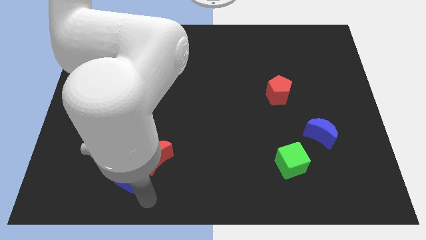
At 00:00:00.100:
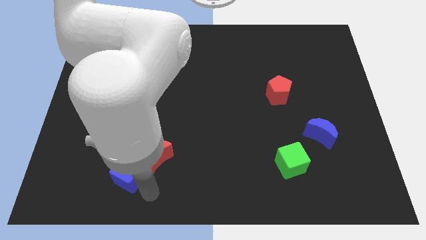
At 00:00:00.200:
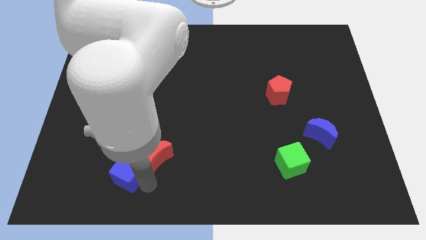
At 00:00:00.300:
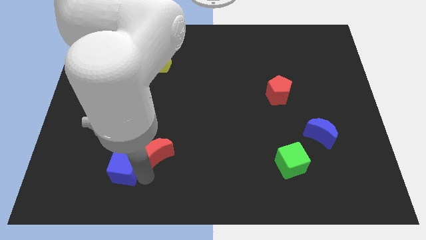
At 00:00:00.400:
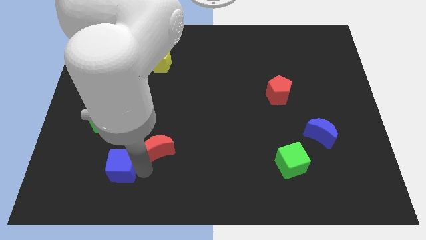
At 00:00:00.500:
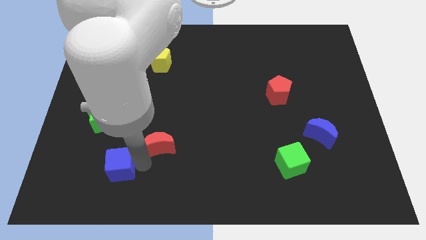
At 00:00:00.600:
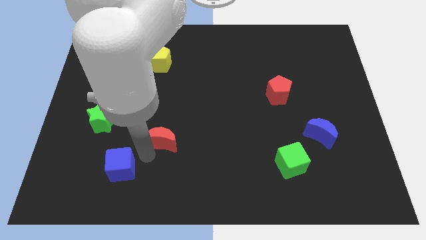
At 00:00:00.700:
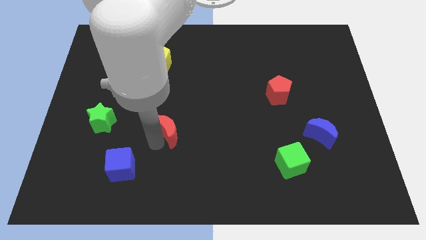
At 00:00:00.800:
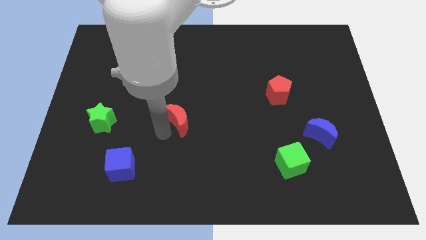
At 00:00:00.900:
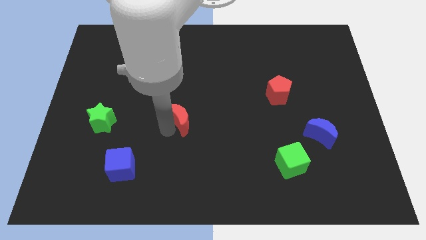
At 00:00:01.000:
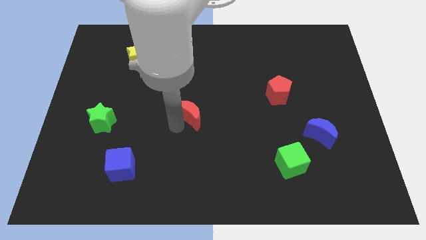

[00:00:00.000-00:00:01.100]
separate the red moon from blue cube

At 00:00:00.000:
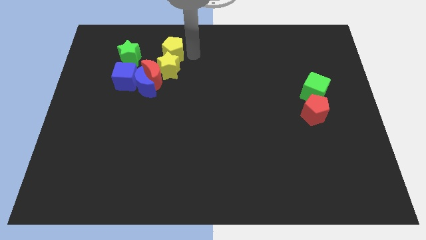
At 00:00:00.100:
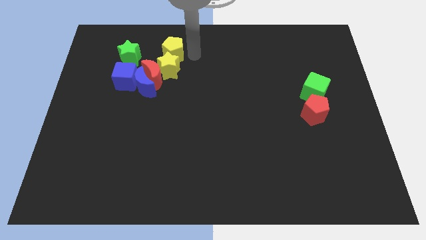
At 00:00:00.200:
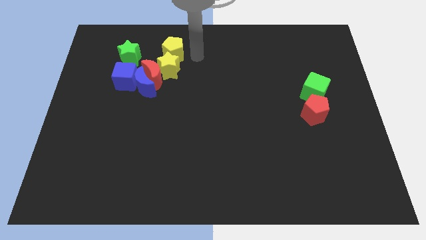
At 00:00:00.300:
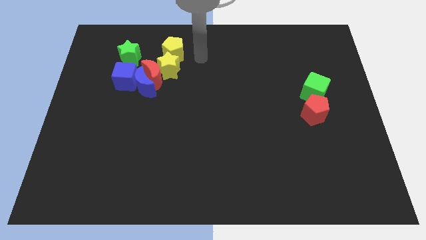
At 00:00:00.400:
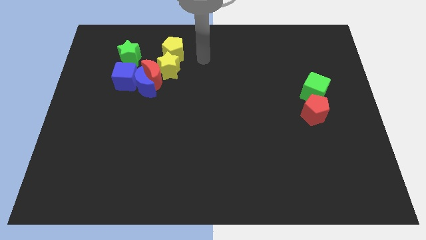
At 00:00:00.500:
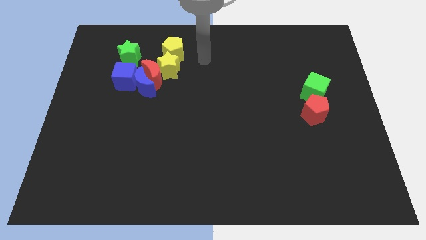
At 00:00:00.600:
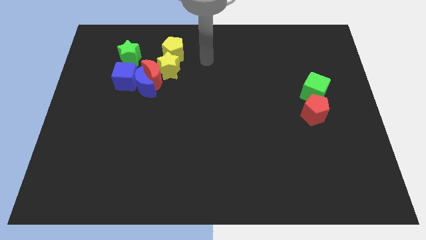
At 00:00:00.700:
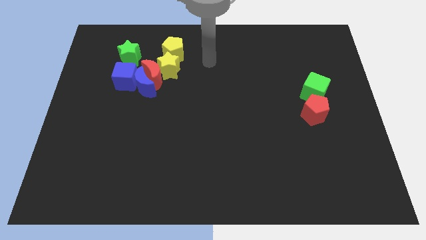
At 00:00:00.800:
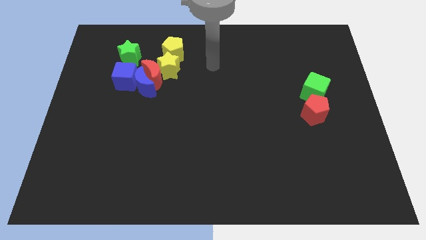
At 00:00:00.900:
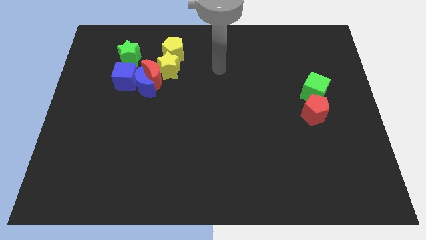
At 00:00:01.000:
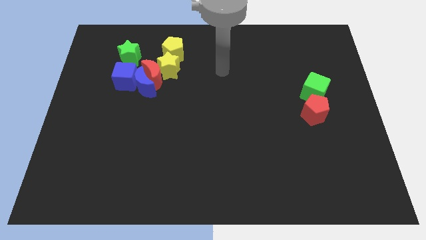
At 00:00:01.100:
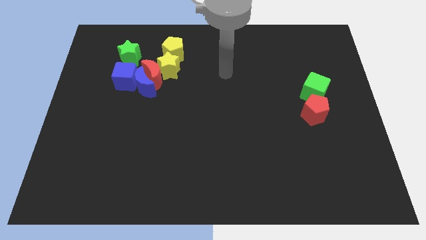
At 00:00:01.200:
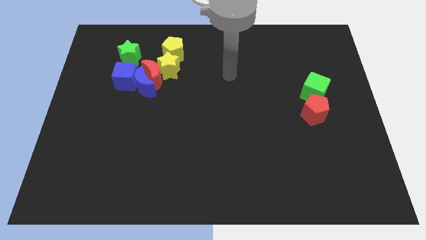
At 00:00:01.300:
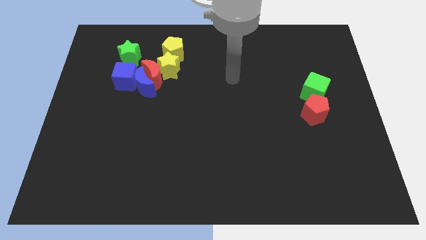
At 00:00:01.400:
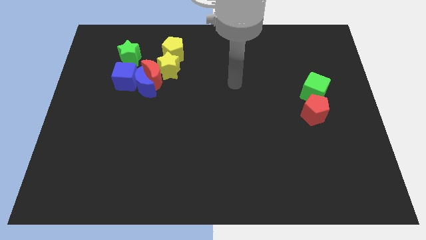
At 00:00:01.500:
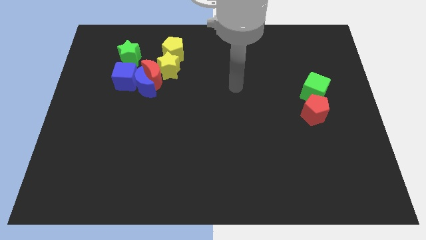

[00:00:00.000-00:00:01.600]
drag your hand away from the yellow pentagon

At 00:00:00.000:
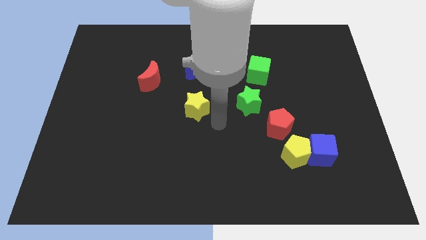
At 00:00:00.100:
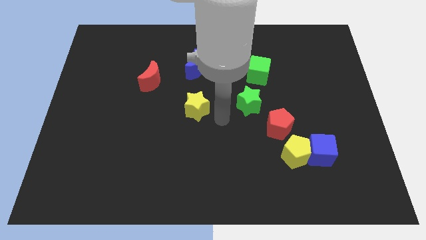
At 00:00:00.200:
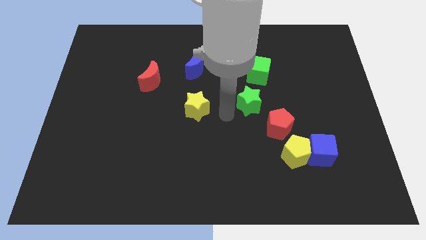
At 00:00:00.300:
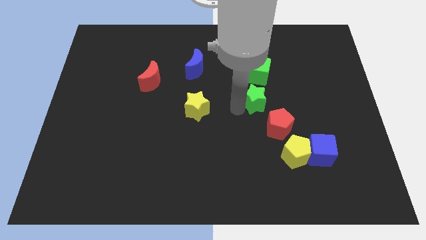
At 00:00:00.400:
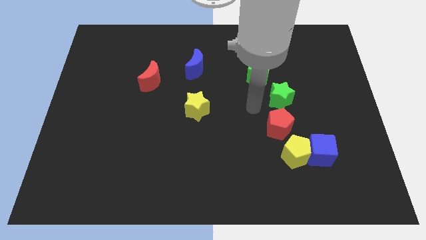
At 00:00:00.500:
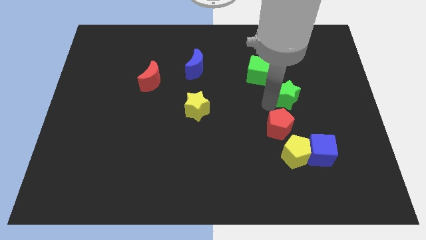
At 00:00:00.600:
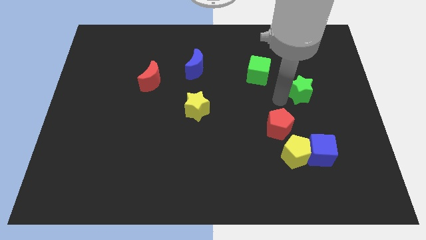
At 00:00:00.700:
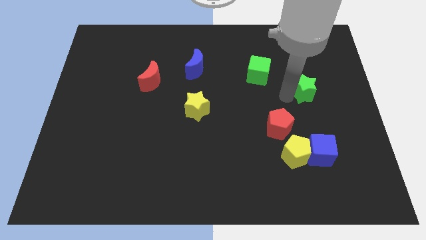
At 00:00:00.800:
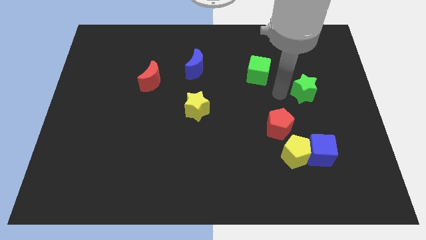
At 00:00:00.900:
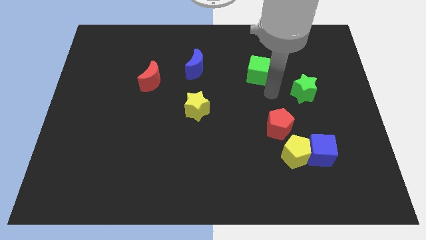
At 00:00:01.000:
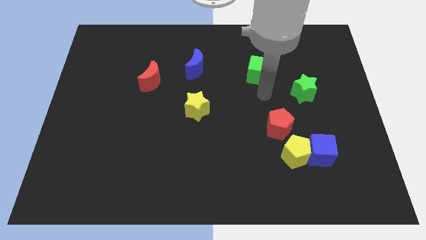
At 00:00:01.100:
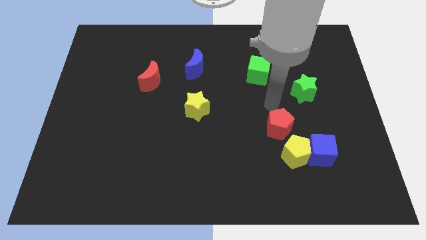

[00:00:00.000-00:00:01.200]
put the green star above the blue cube

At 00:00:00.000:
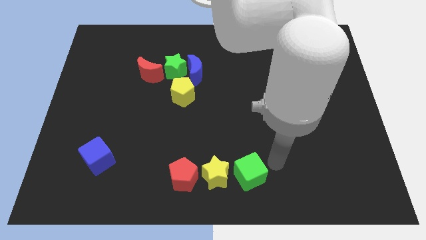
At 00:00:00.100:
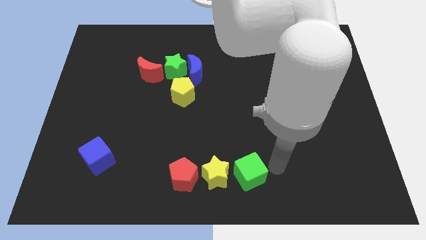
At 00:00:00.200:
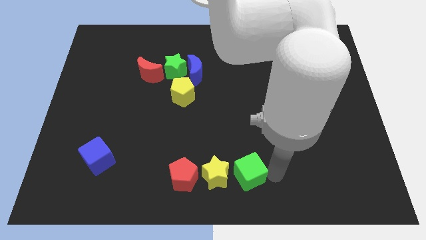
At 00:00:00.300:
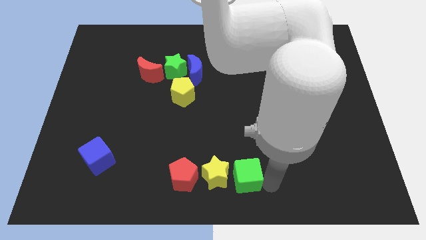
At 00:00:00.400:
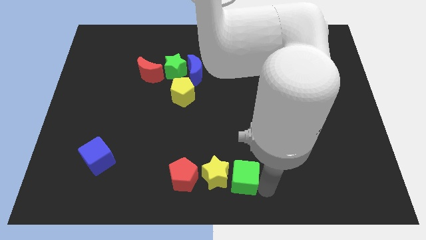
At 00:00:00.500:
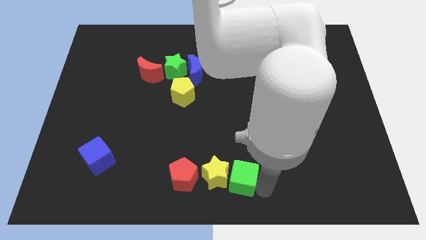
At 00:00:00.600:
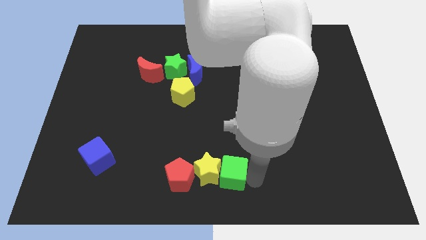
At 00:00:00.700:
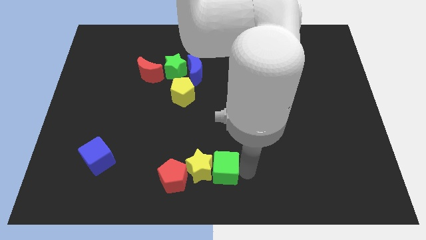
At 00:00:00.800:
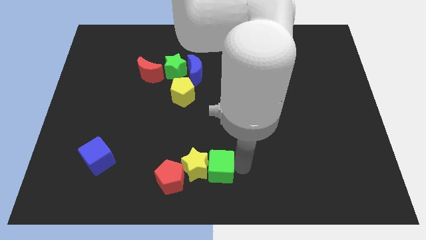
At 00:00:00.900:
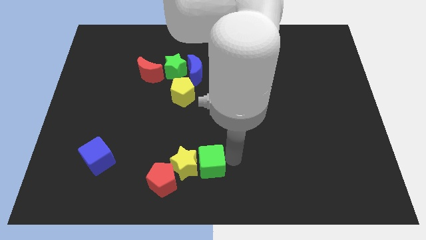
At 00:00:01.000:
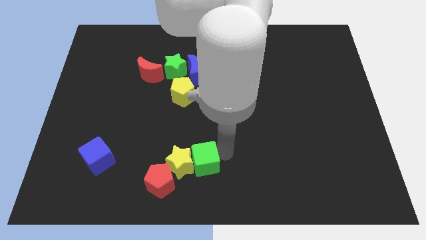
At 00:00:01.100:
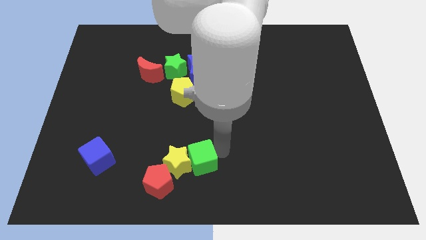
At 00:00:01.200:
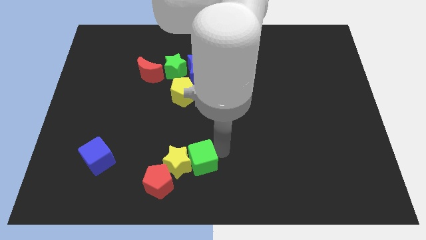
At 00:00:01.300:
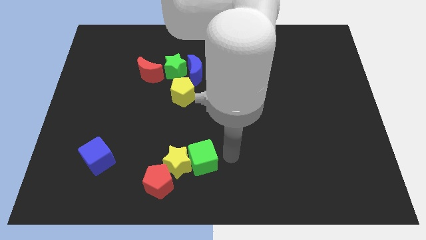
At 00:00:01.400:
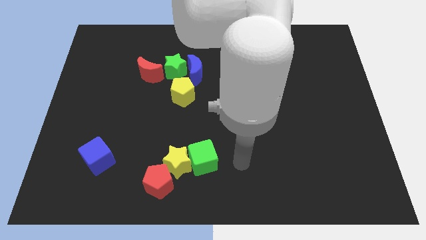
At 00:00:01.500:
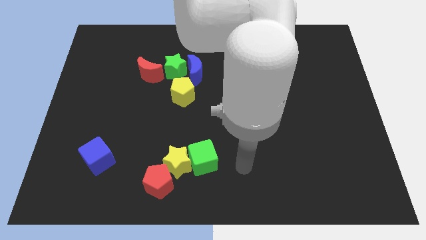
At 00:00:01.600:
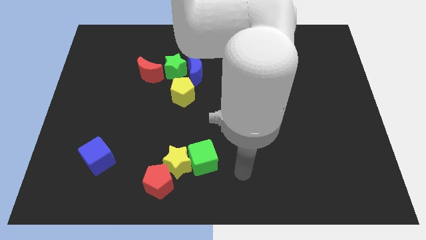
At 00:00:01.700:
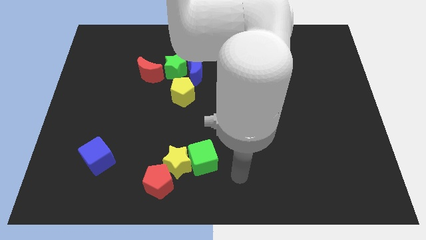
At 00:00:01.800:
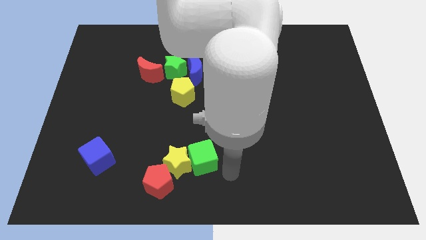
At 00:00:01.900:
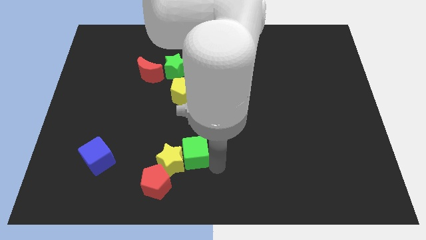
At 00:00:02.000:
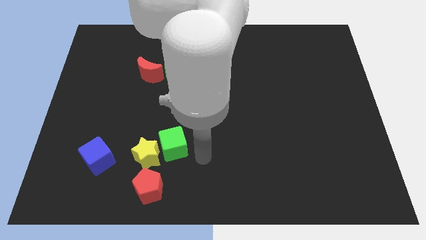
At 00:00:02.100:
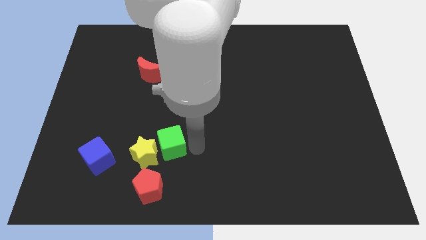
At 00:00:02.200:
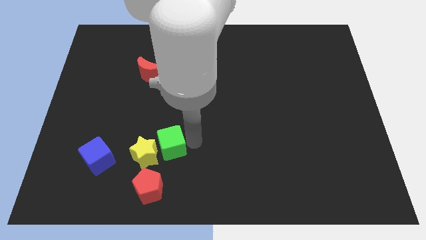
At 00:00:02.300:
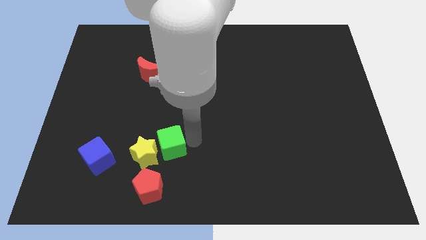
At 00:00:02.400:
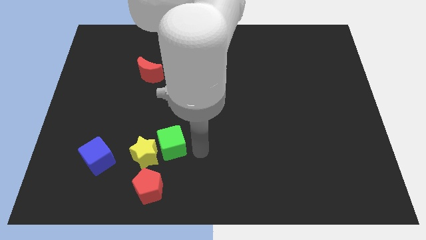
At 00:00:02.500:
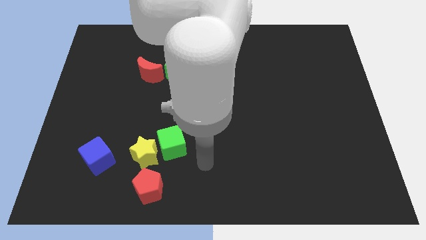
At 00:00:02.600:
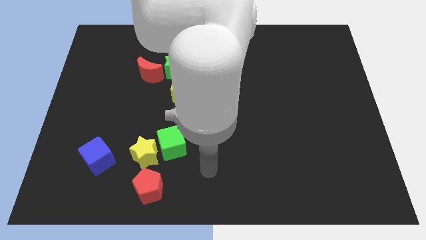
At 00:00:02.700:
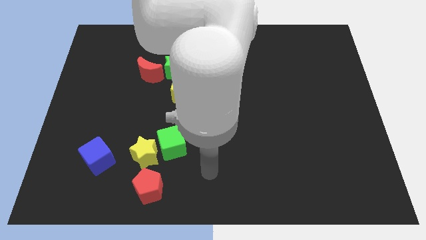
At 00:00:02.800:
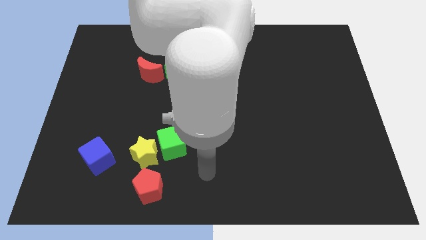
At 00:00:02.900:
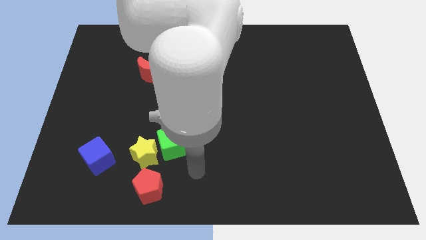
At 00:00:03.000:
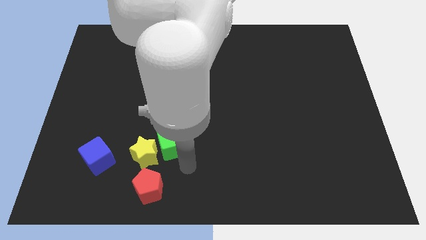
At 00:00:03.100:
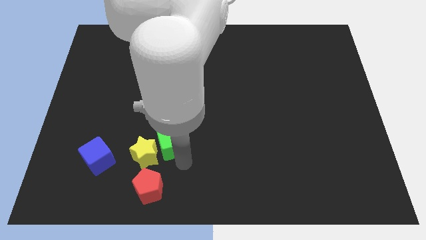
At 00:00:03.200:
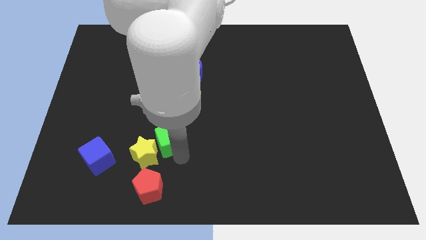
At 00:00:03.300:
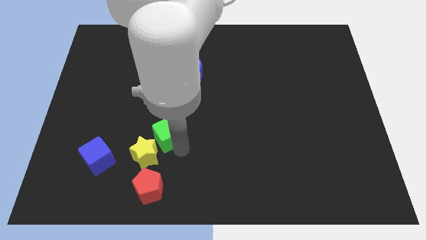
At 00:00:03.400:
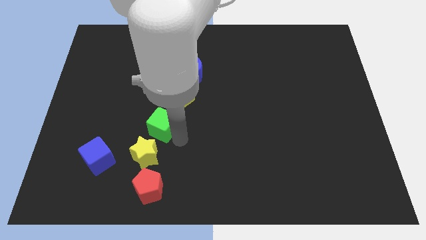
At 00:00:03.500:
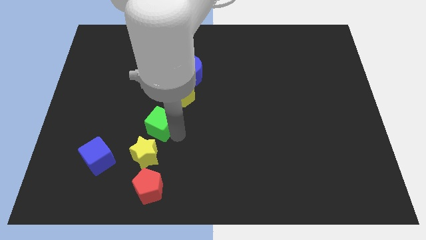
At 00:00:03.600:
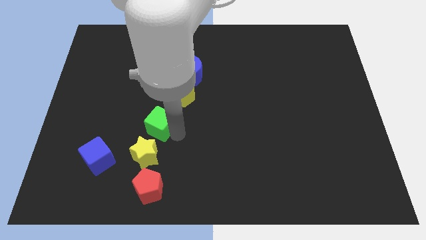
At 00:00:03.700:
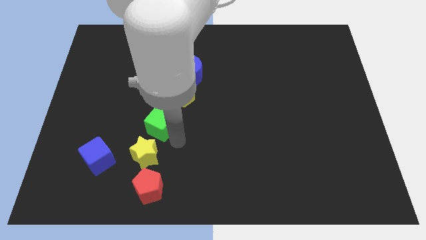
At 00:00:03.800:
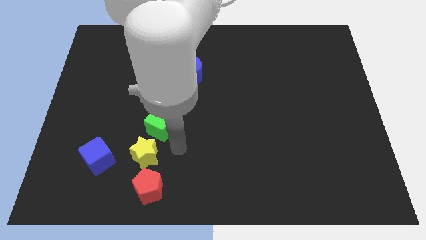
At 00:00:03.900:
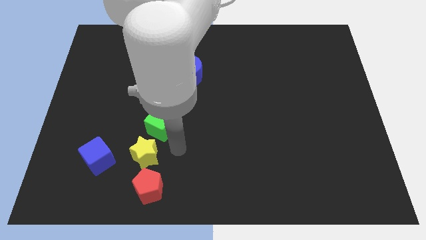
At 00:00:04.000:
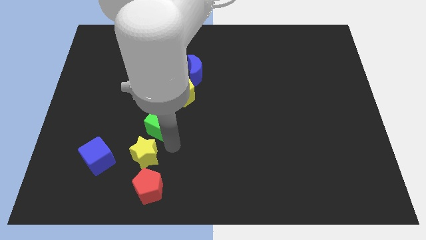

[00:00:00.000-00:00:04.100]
put the green cube in between the yellow blocks

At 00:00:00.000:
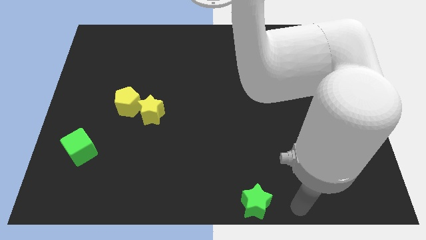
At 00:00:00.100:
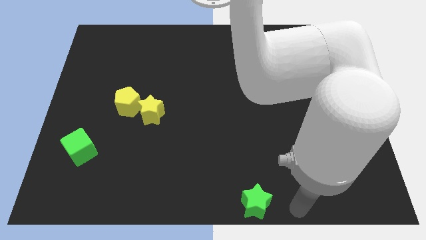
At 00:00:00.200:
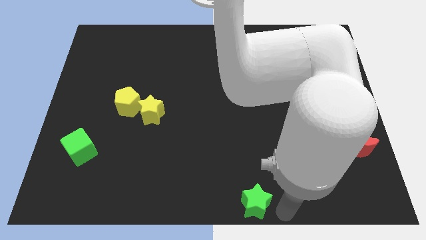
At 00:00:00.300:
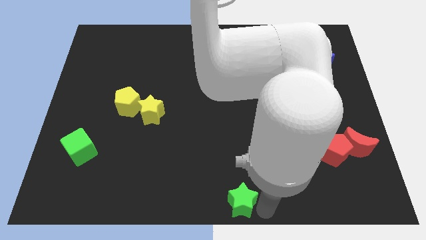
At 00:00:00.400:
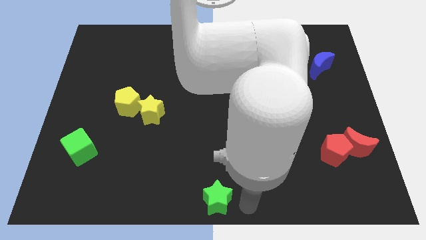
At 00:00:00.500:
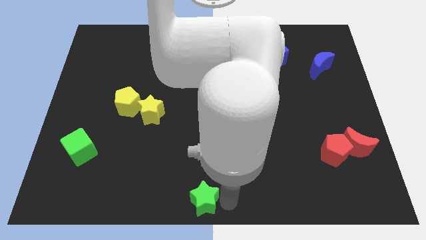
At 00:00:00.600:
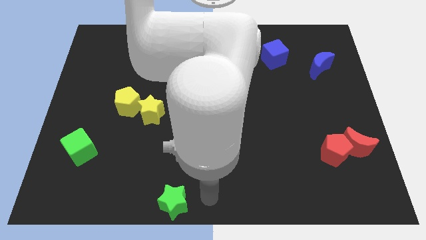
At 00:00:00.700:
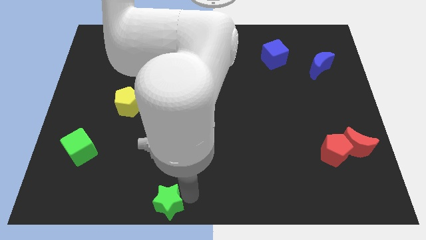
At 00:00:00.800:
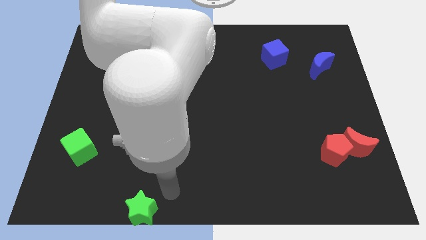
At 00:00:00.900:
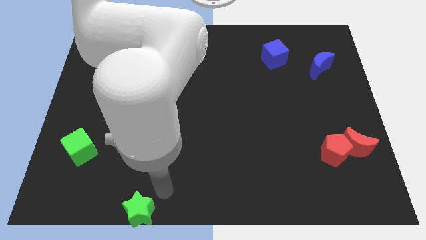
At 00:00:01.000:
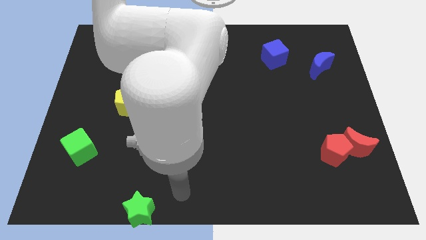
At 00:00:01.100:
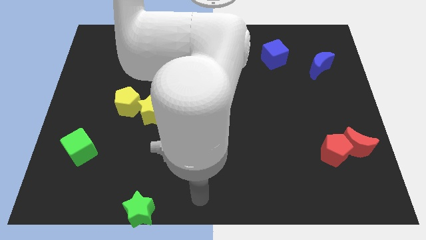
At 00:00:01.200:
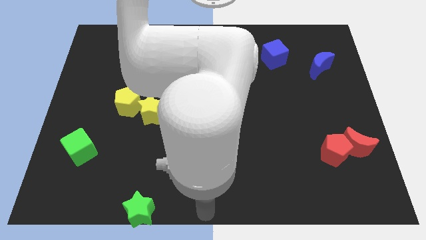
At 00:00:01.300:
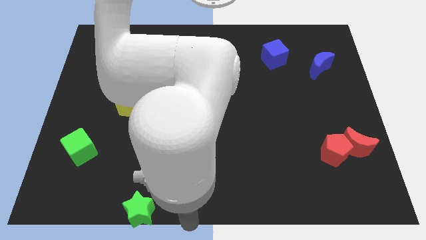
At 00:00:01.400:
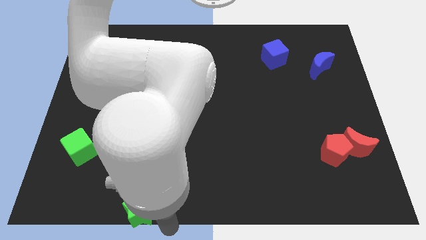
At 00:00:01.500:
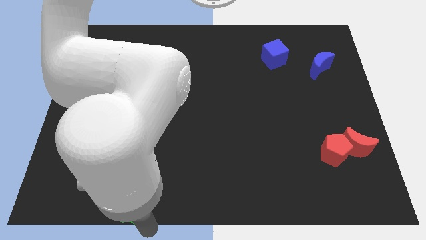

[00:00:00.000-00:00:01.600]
move the green star to left side of the board
